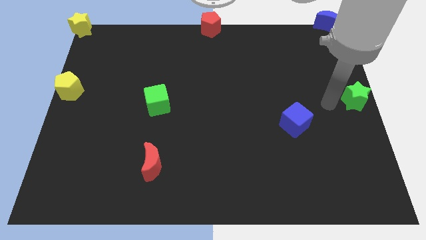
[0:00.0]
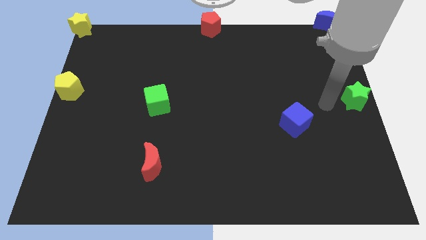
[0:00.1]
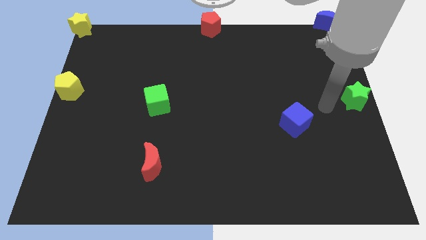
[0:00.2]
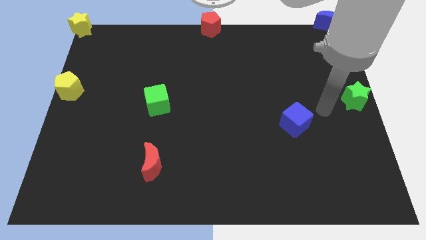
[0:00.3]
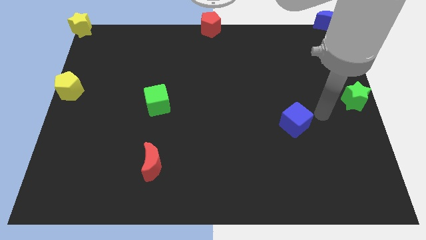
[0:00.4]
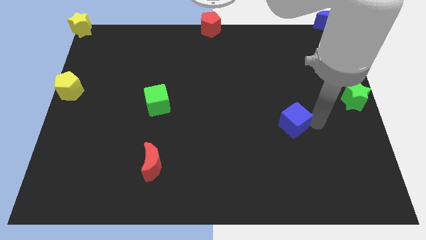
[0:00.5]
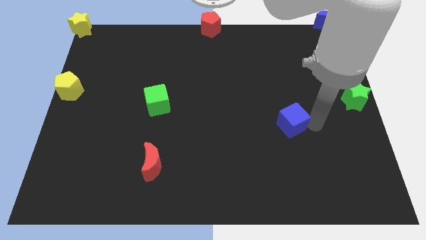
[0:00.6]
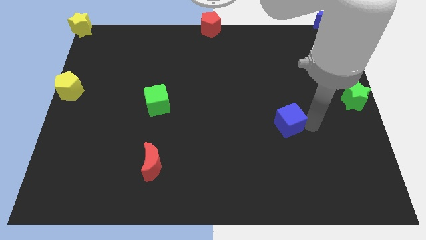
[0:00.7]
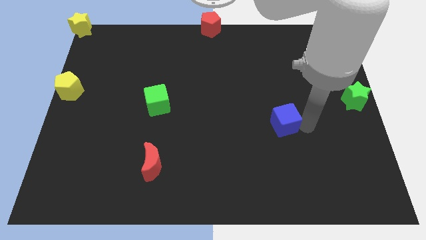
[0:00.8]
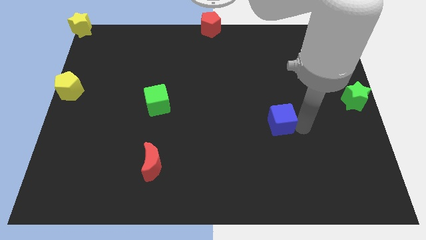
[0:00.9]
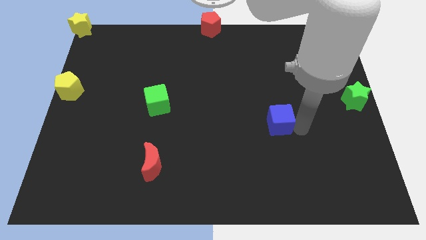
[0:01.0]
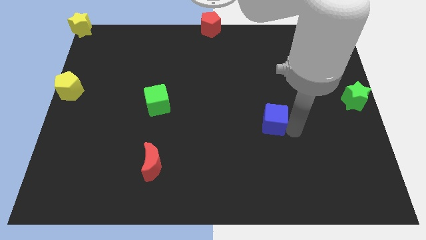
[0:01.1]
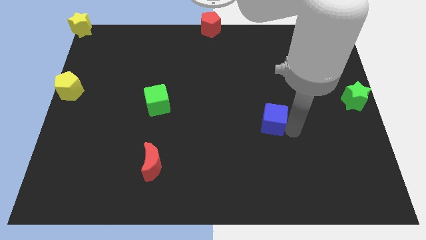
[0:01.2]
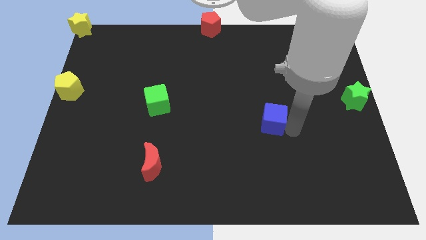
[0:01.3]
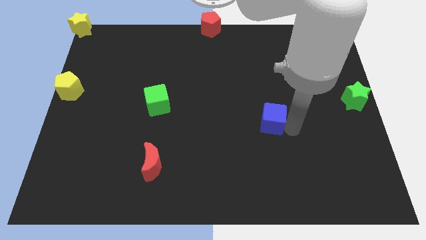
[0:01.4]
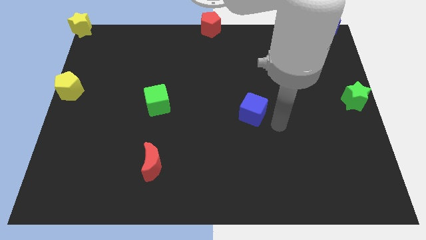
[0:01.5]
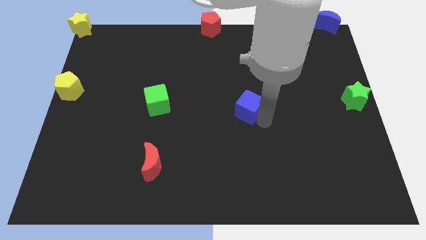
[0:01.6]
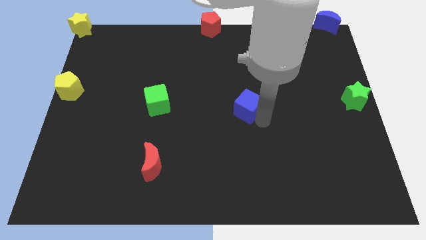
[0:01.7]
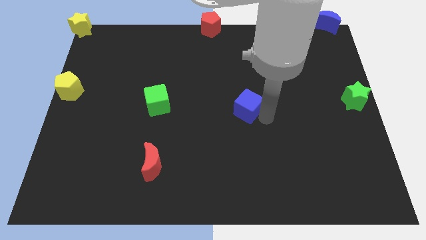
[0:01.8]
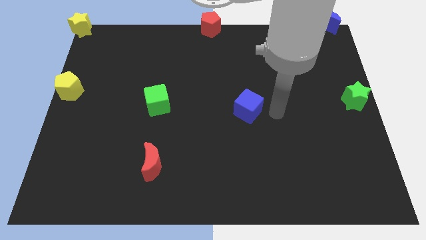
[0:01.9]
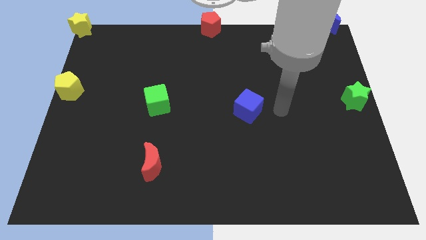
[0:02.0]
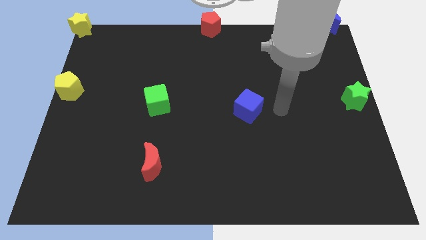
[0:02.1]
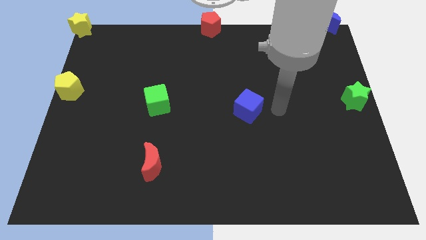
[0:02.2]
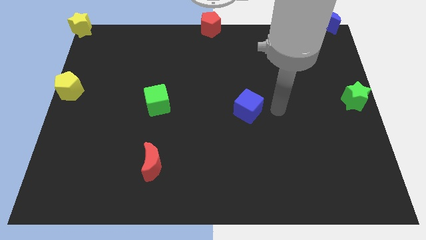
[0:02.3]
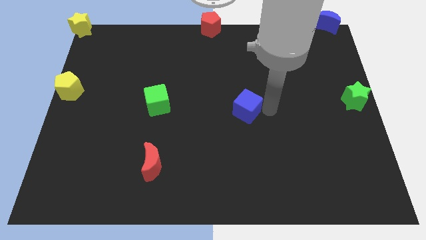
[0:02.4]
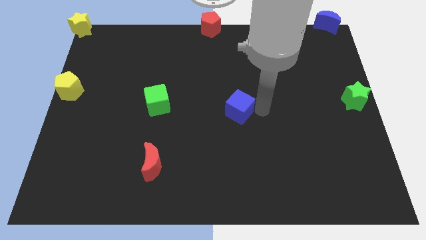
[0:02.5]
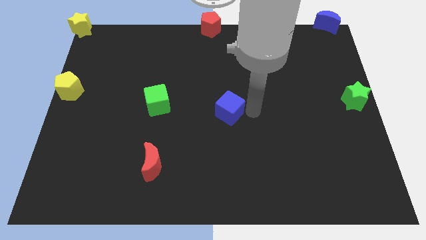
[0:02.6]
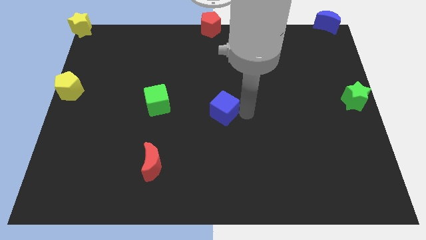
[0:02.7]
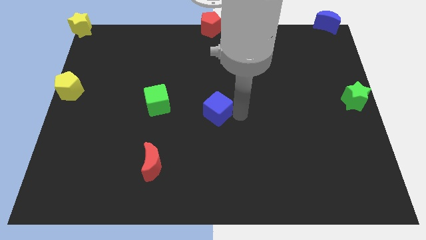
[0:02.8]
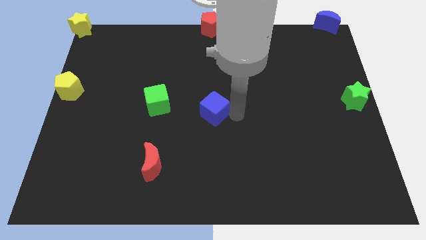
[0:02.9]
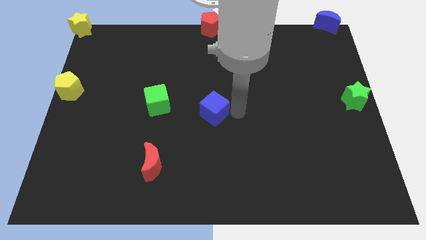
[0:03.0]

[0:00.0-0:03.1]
move the blue cube to the bottom side of the red pentagon

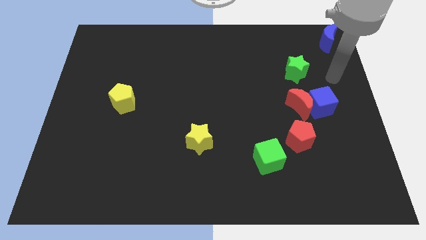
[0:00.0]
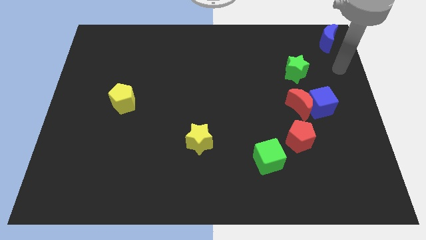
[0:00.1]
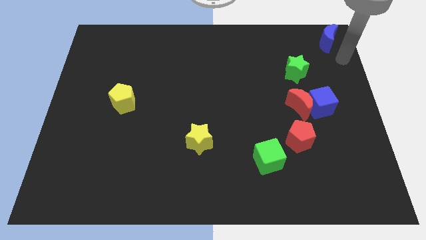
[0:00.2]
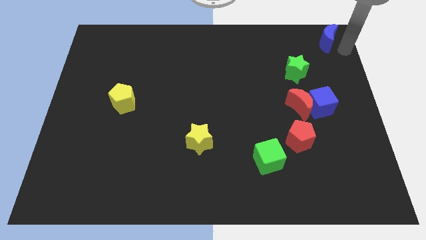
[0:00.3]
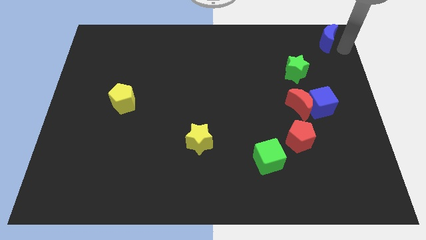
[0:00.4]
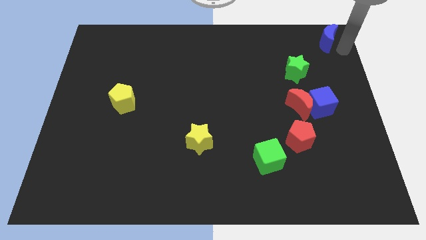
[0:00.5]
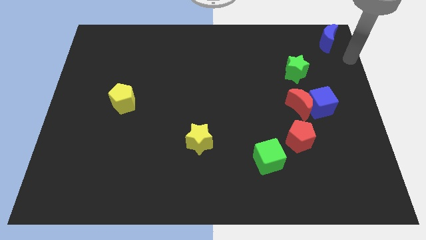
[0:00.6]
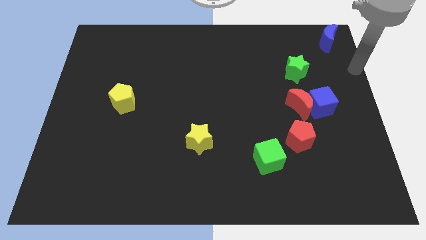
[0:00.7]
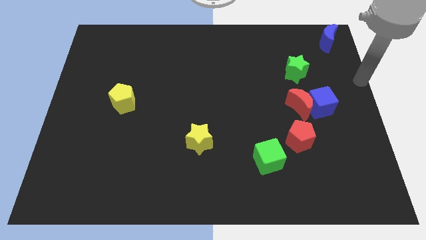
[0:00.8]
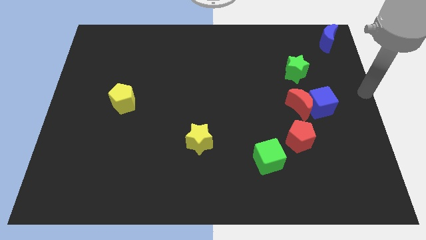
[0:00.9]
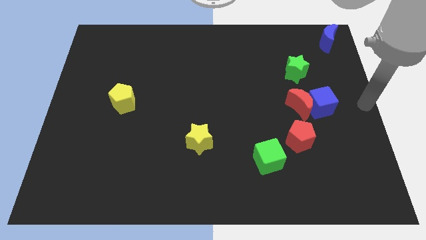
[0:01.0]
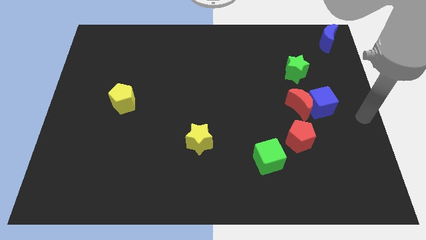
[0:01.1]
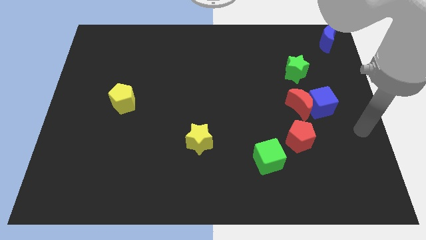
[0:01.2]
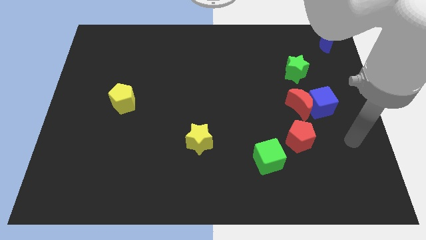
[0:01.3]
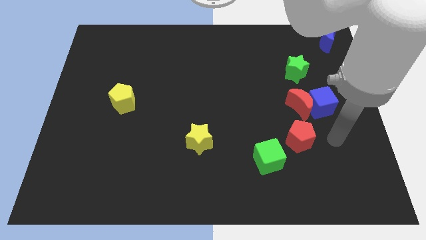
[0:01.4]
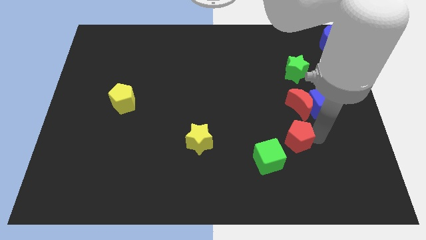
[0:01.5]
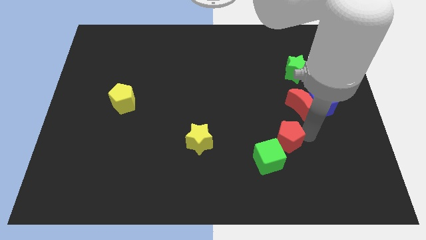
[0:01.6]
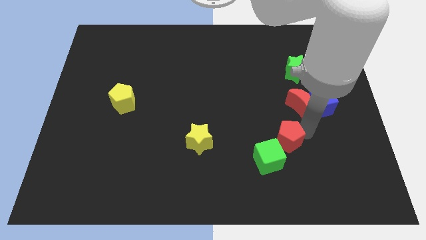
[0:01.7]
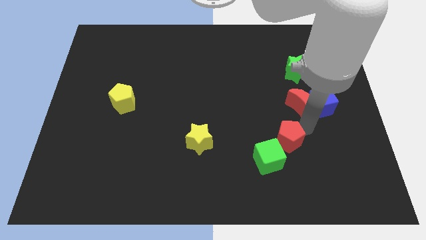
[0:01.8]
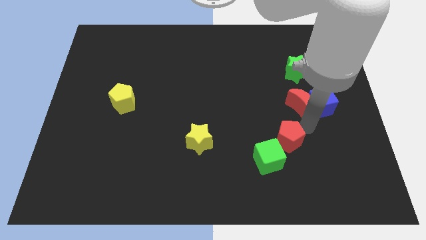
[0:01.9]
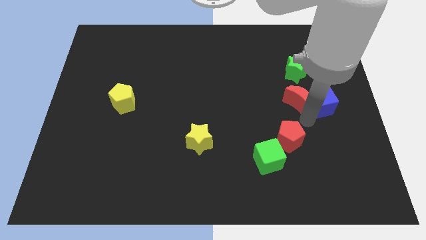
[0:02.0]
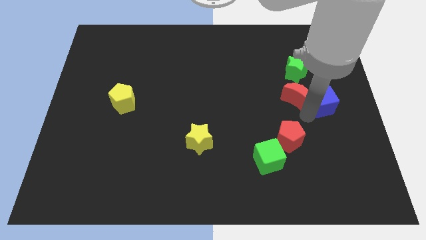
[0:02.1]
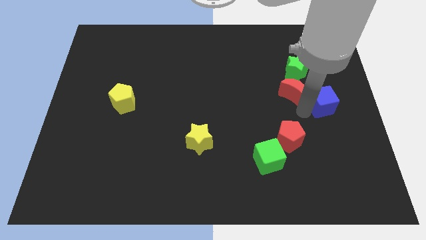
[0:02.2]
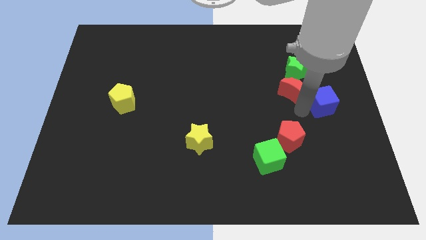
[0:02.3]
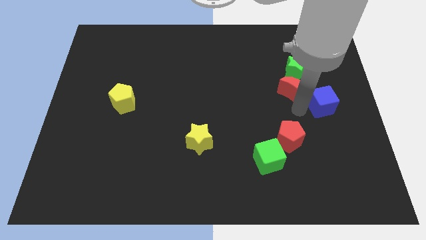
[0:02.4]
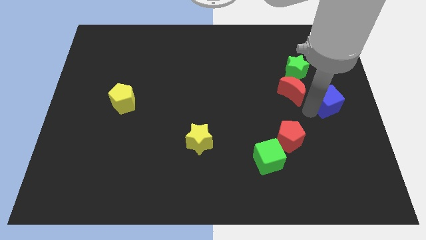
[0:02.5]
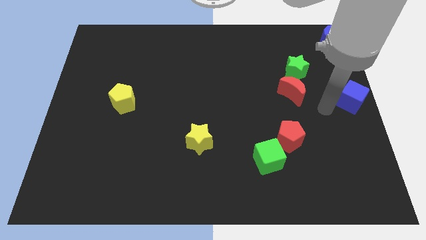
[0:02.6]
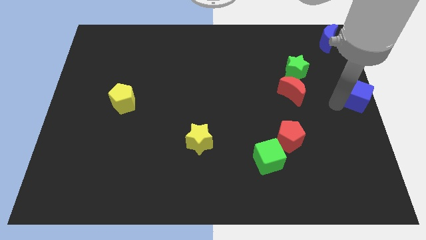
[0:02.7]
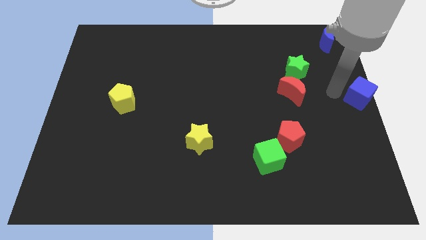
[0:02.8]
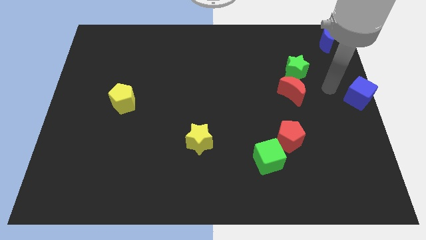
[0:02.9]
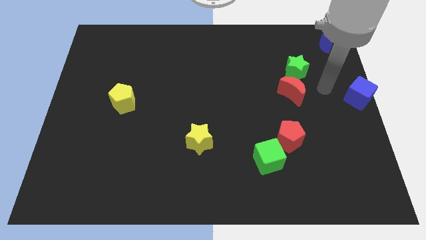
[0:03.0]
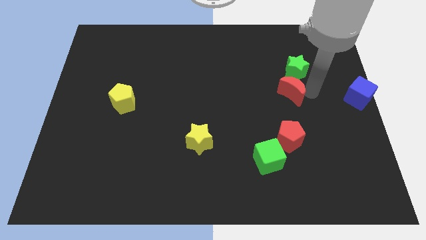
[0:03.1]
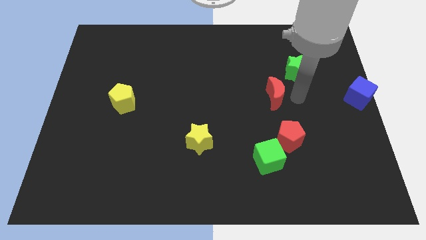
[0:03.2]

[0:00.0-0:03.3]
place the blue cube at the center right corner

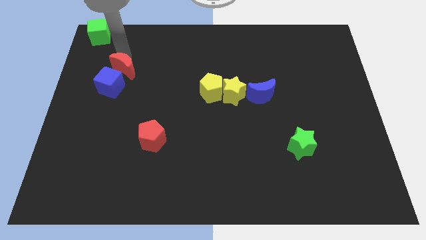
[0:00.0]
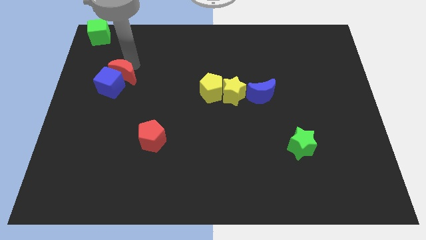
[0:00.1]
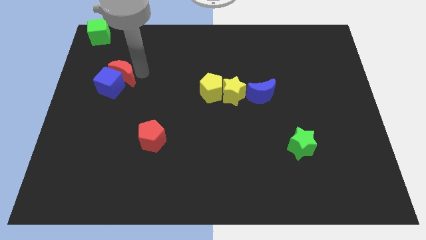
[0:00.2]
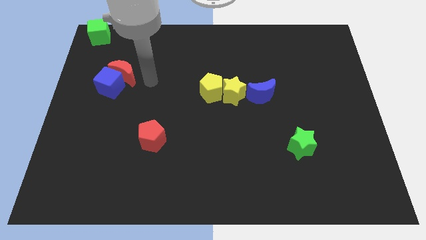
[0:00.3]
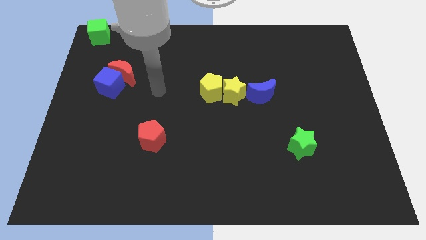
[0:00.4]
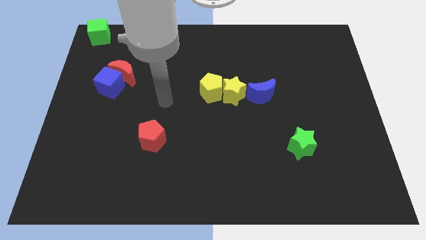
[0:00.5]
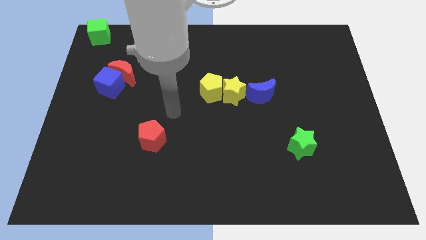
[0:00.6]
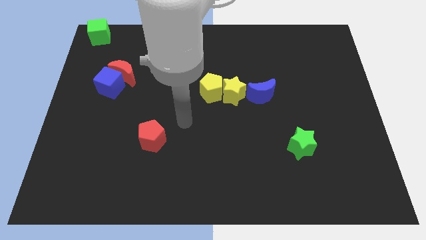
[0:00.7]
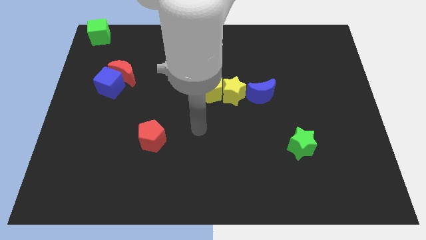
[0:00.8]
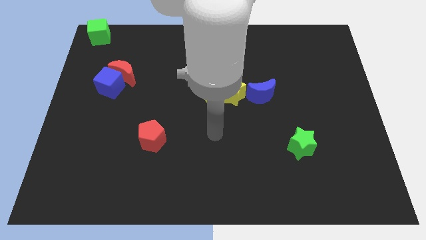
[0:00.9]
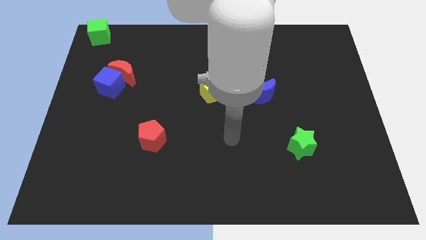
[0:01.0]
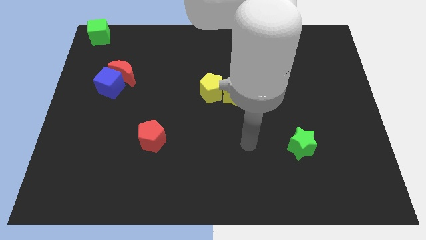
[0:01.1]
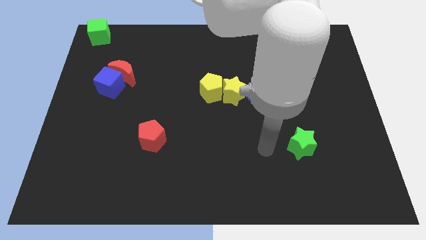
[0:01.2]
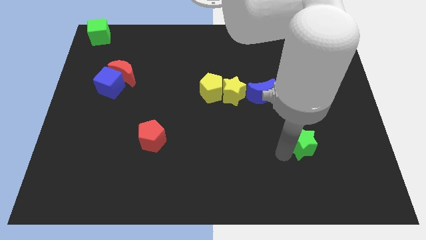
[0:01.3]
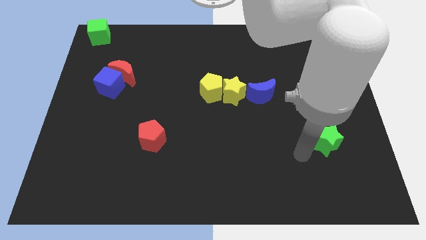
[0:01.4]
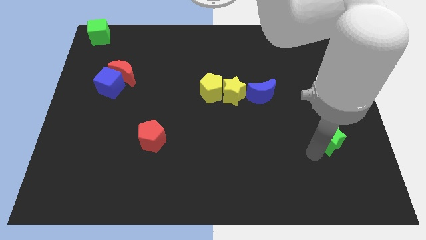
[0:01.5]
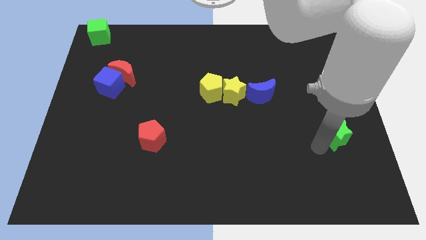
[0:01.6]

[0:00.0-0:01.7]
move the green star to the right

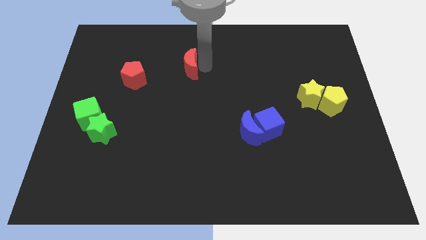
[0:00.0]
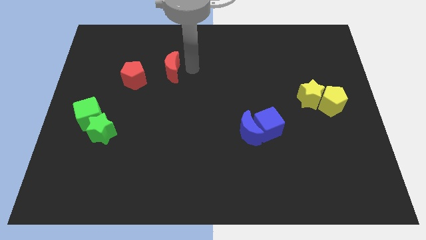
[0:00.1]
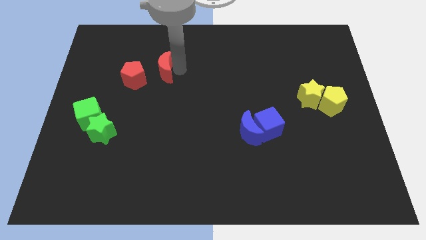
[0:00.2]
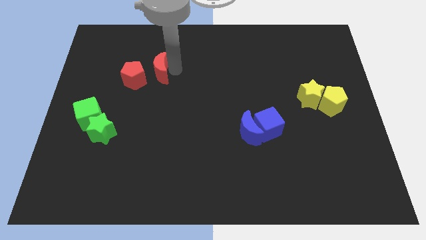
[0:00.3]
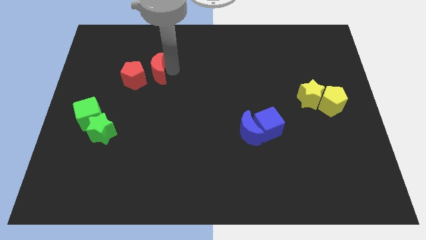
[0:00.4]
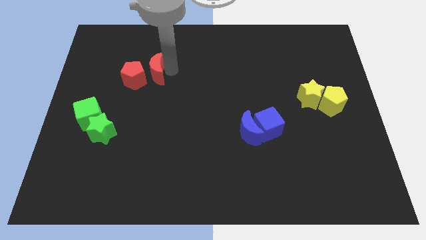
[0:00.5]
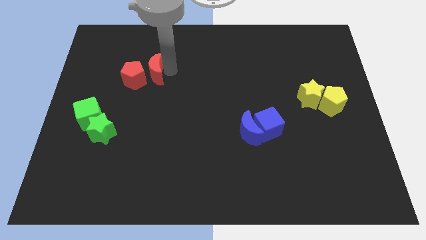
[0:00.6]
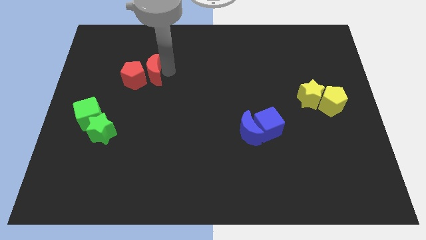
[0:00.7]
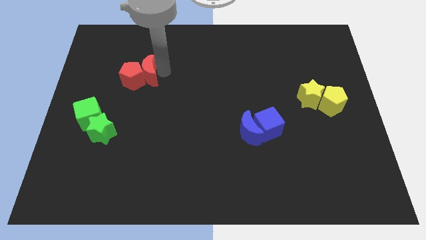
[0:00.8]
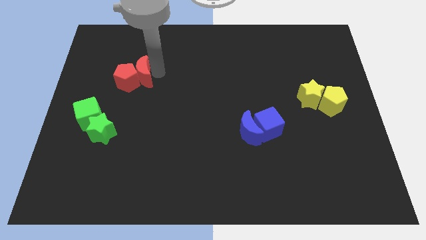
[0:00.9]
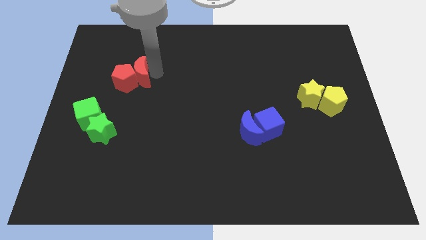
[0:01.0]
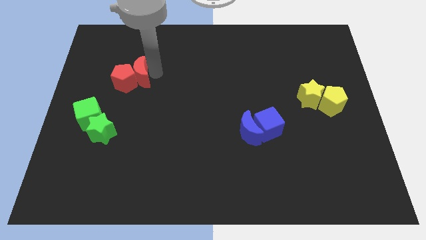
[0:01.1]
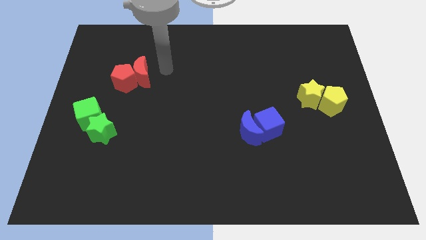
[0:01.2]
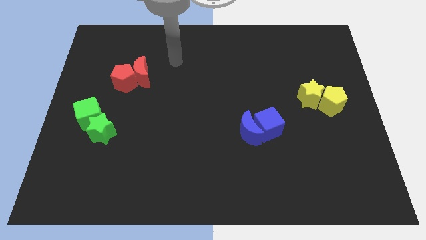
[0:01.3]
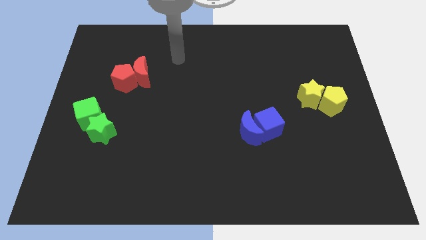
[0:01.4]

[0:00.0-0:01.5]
slide the red crescent into the red pentagon
